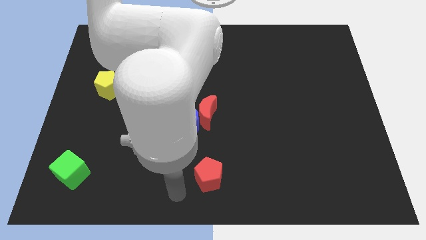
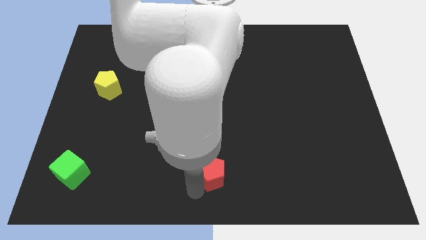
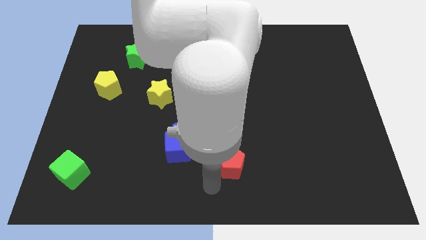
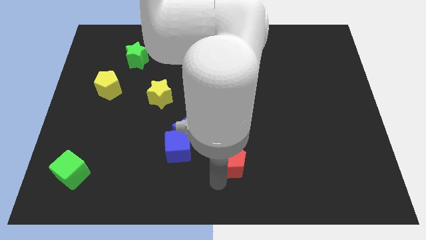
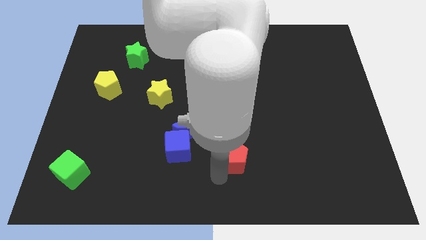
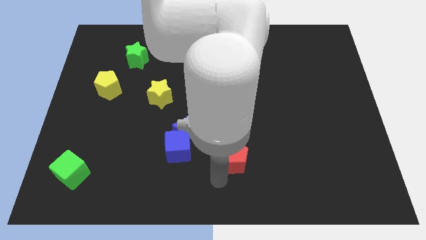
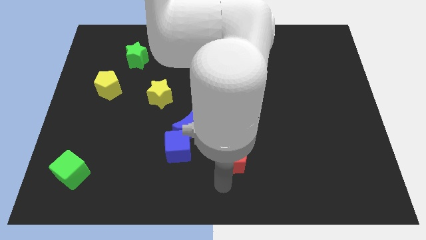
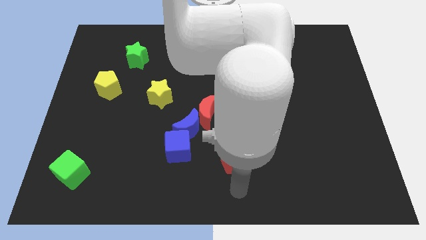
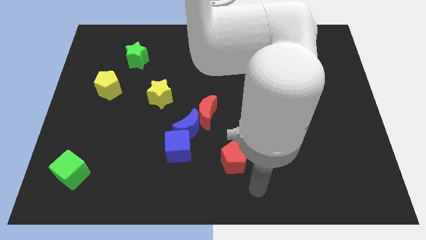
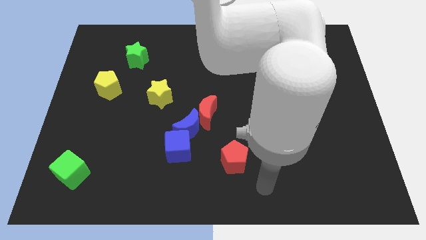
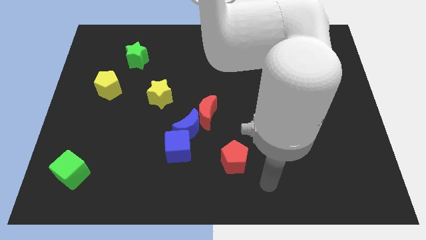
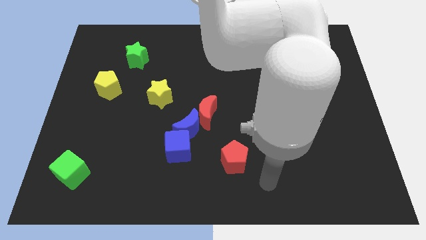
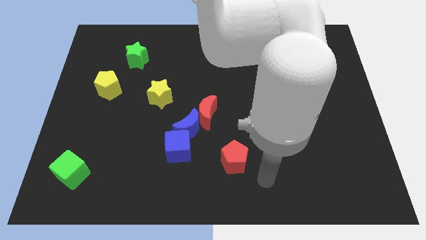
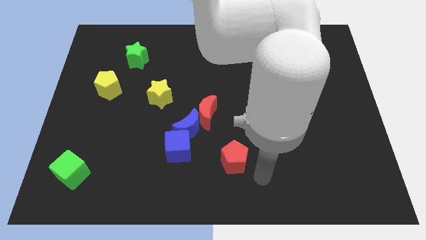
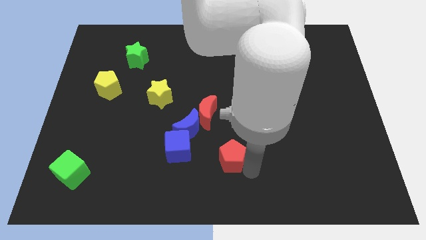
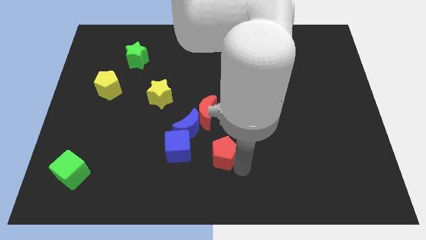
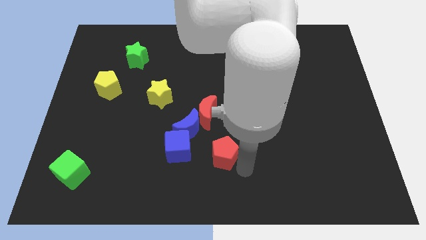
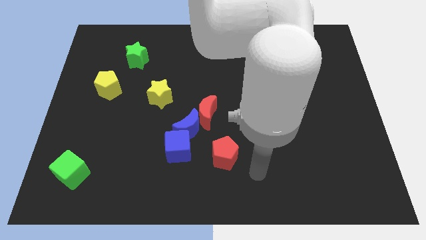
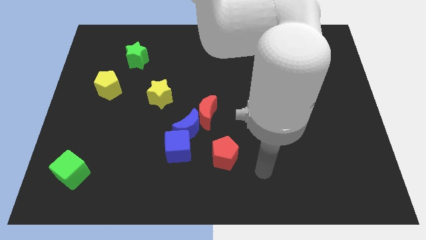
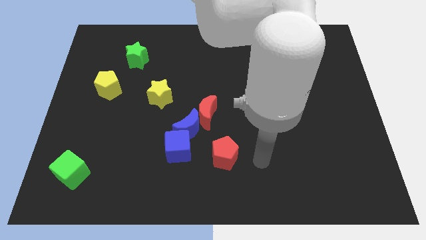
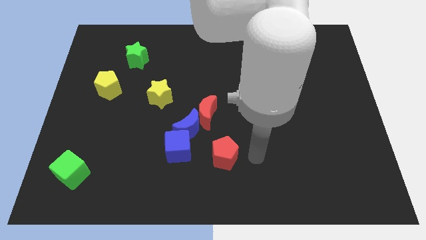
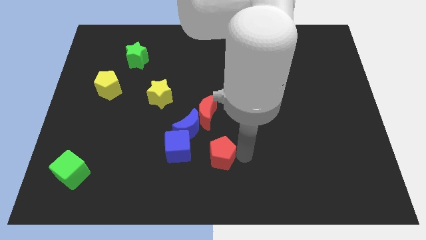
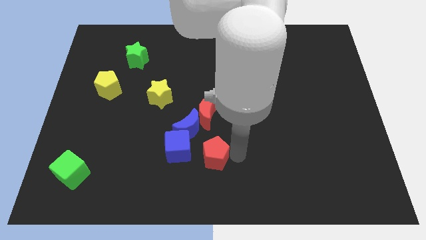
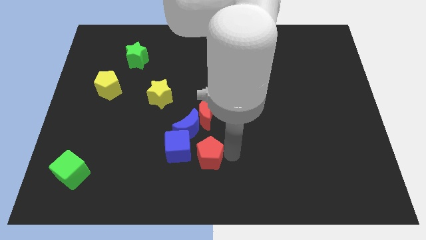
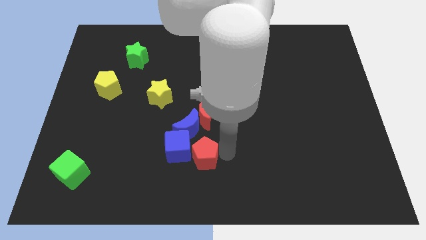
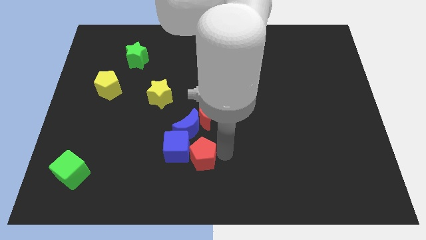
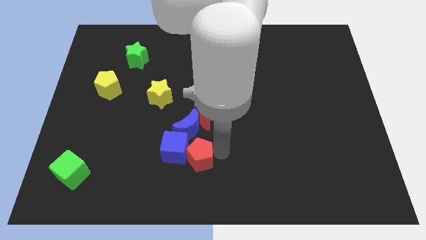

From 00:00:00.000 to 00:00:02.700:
push red pentagon below blue crescent

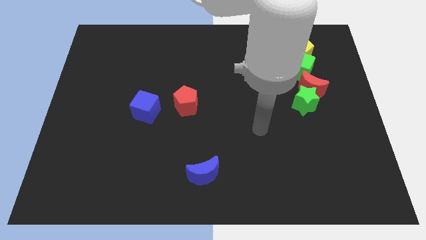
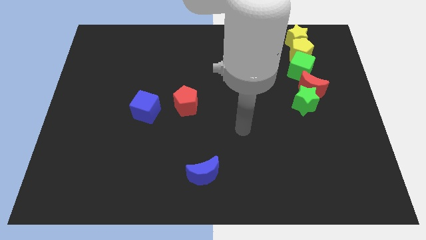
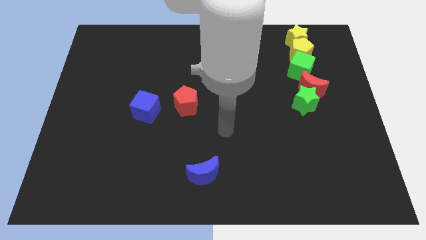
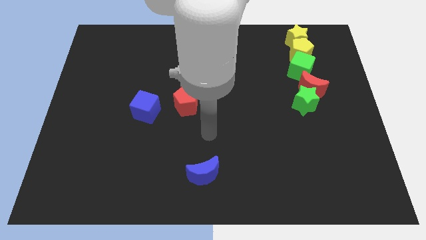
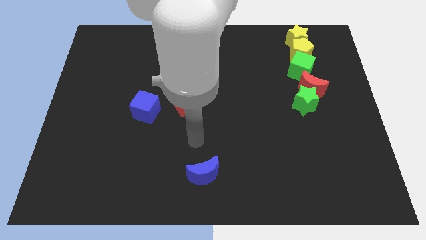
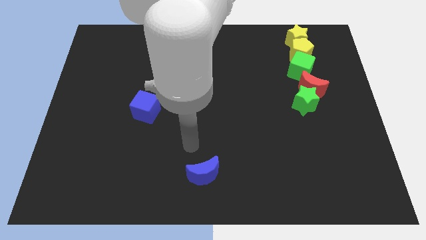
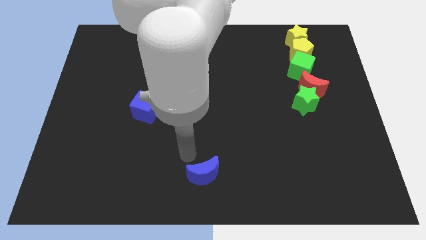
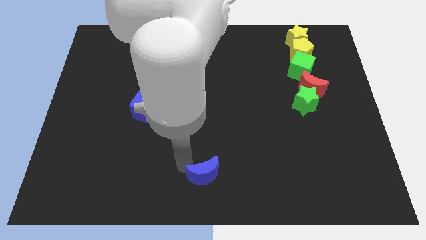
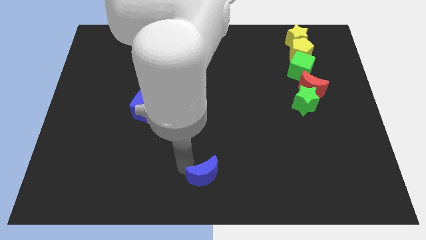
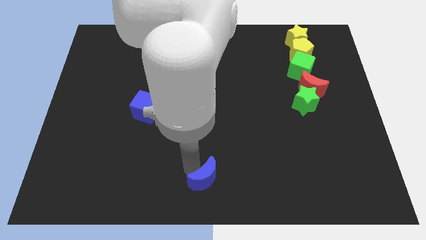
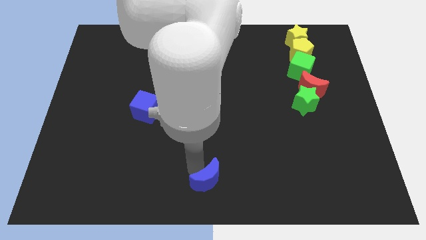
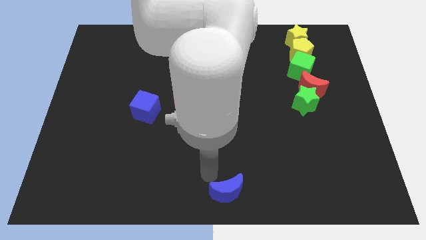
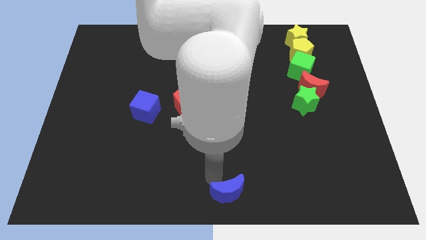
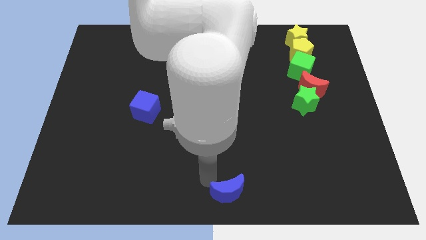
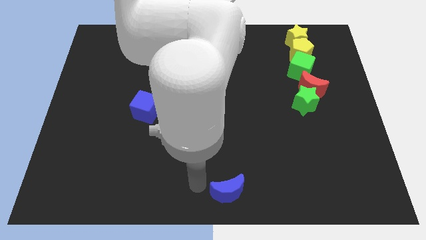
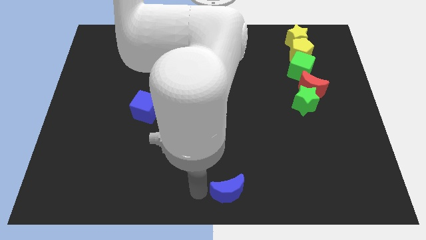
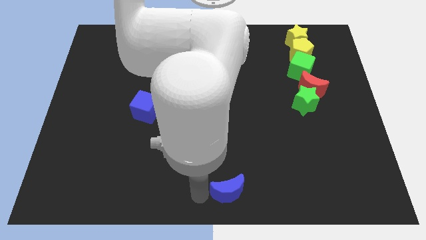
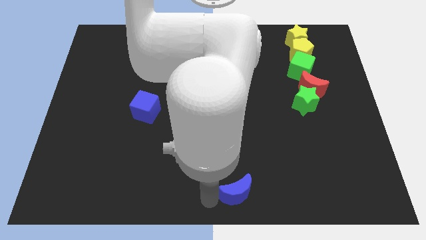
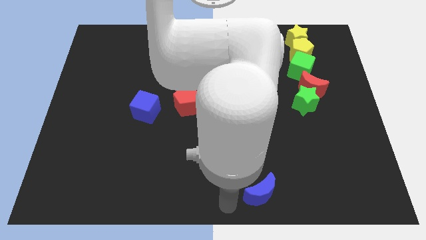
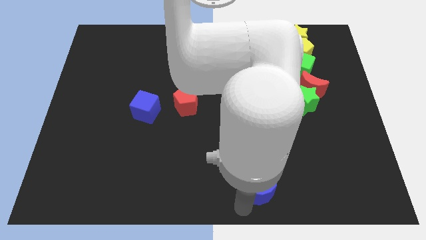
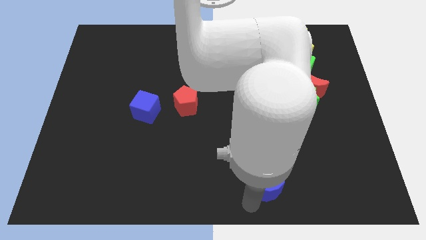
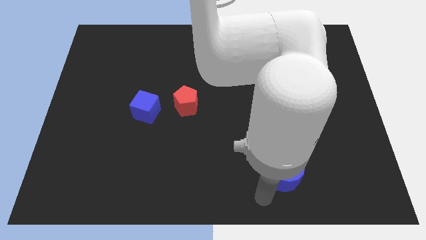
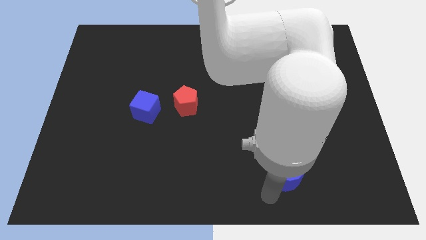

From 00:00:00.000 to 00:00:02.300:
drag the blue moon towards up

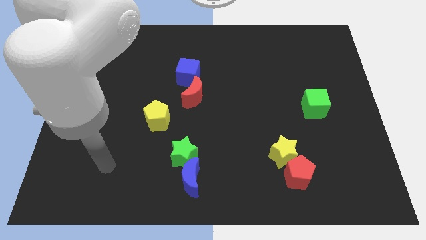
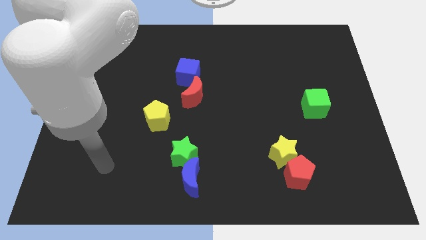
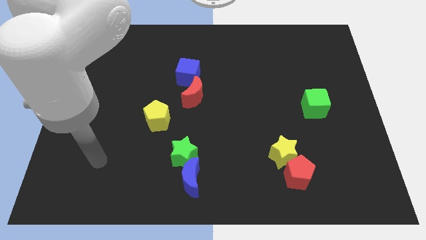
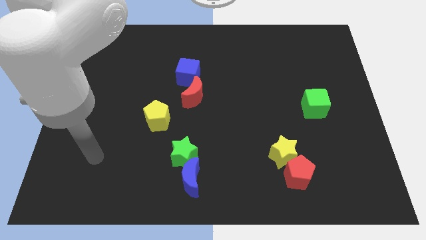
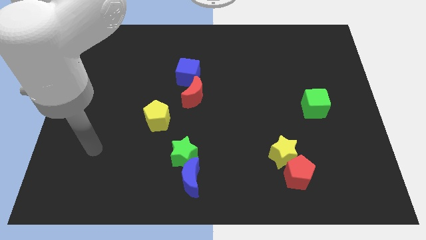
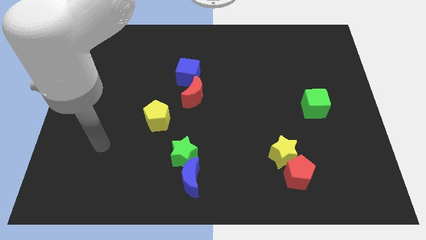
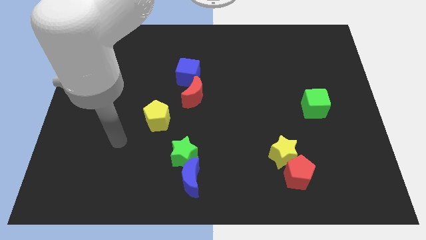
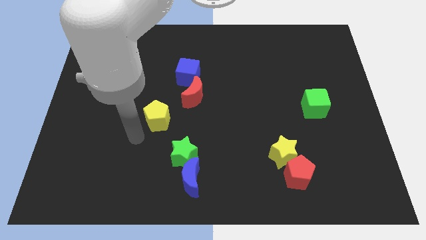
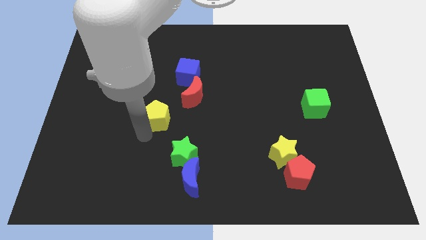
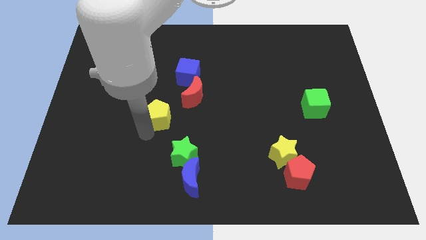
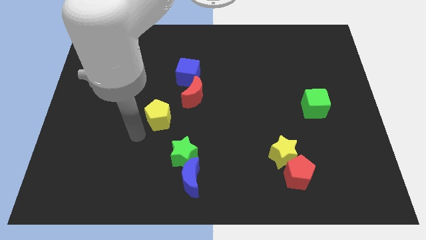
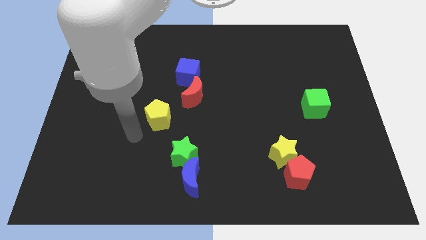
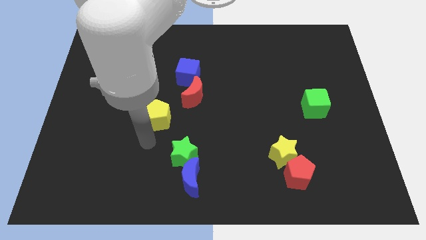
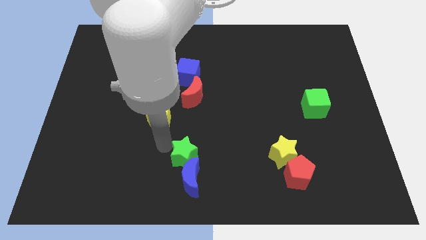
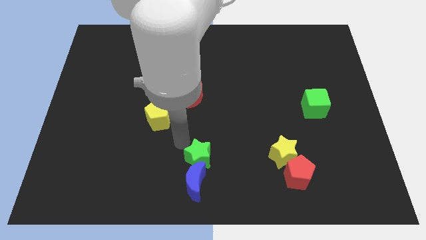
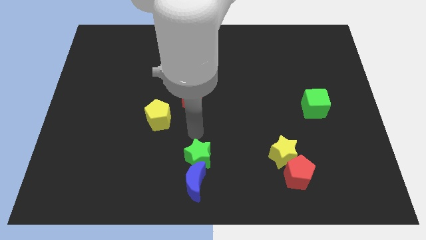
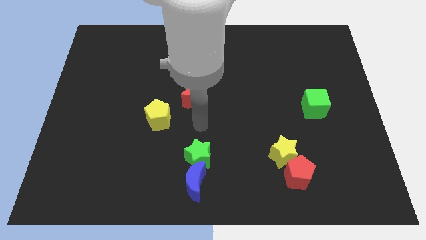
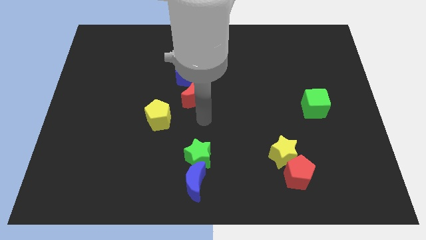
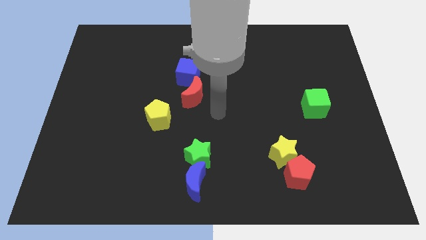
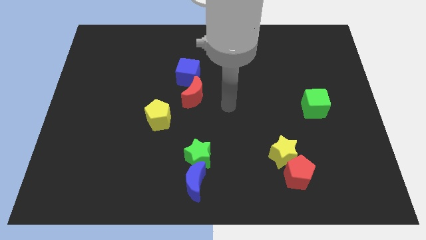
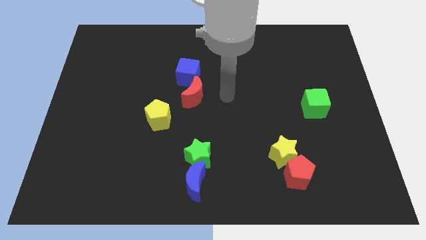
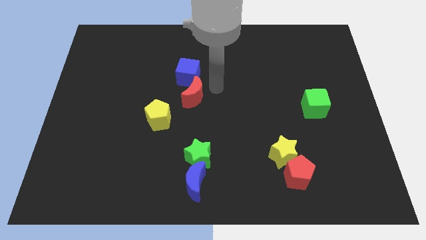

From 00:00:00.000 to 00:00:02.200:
move yourself close to the red moon

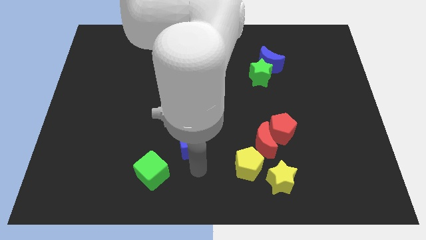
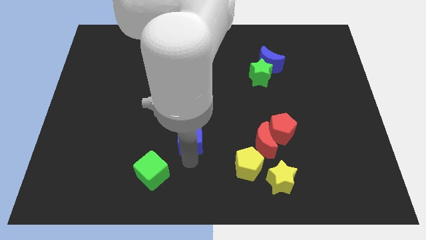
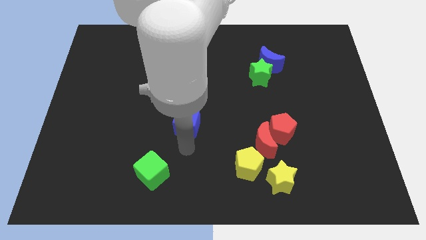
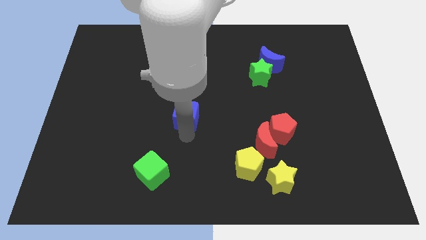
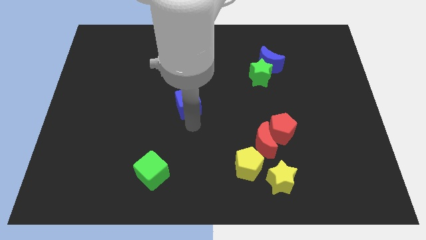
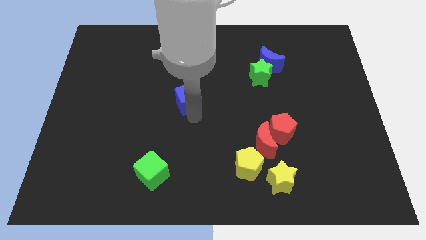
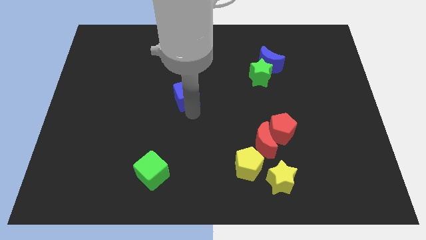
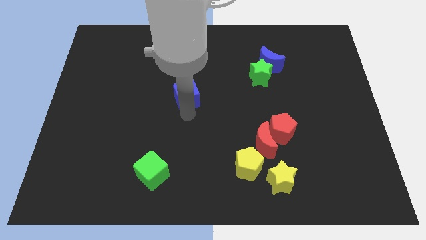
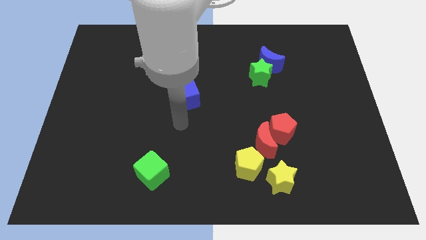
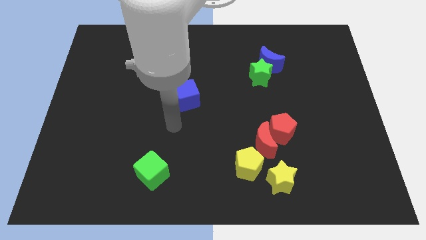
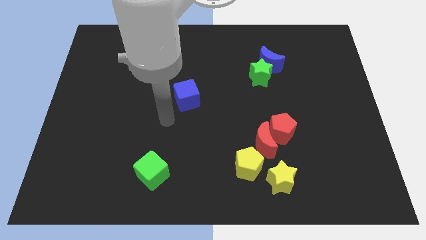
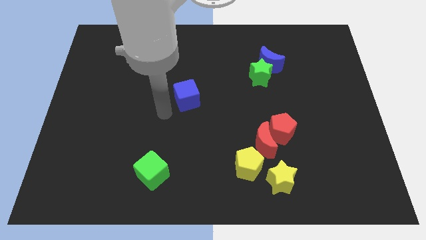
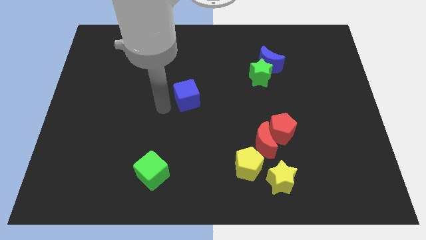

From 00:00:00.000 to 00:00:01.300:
slide the blue cube up slightly

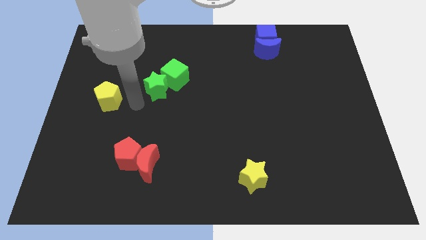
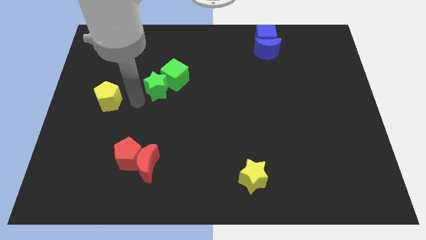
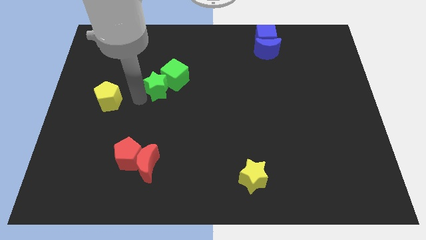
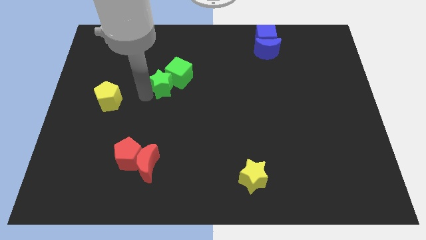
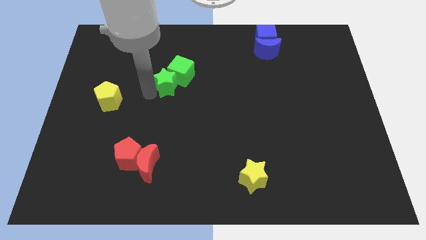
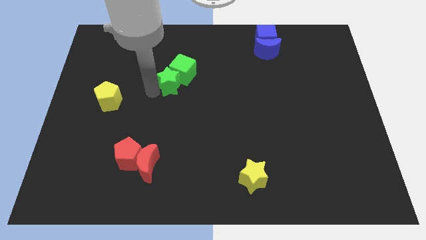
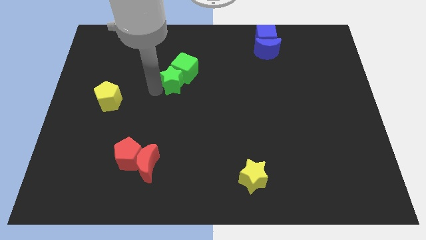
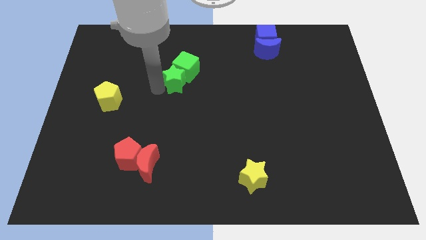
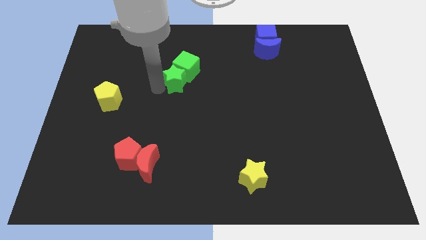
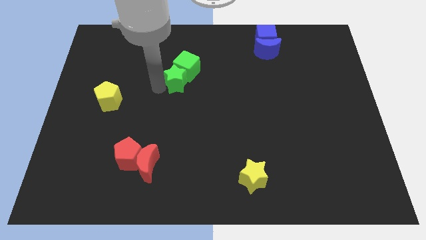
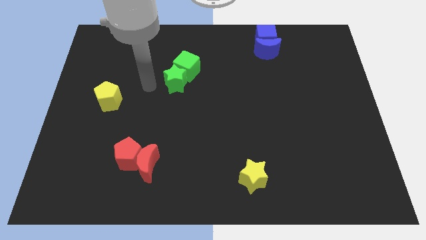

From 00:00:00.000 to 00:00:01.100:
push the green cube with the green star
